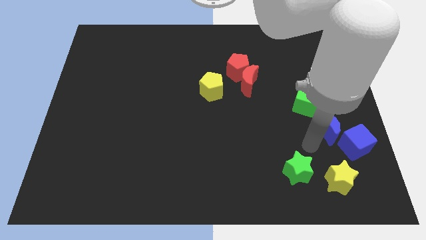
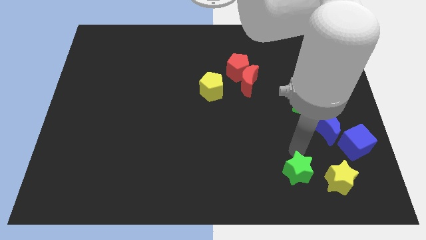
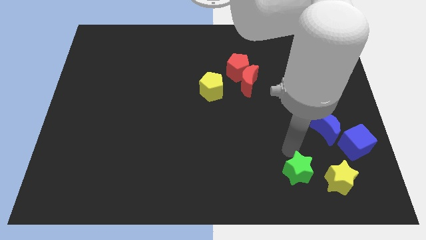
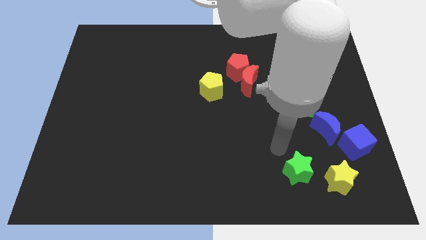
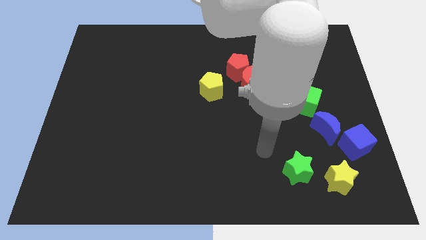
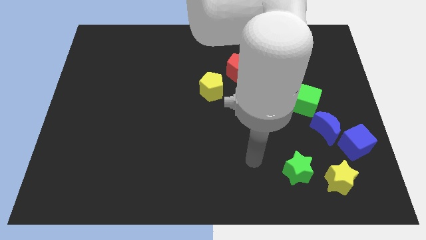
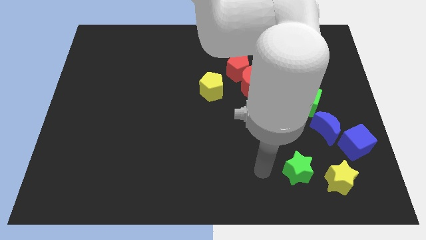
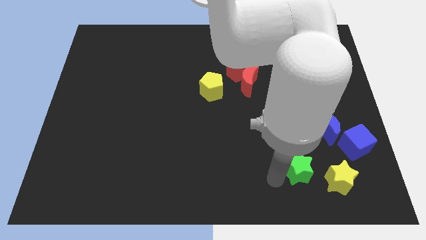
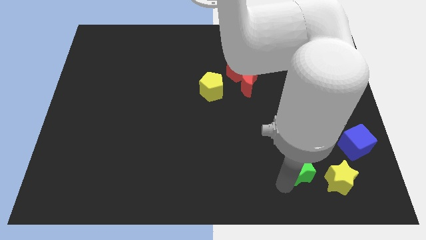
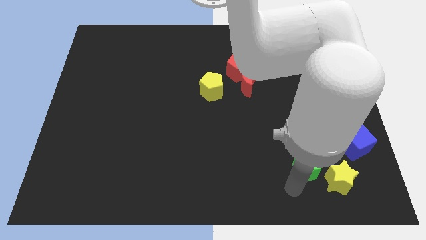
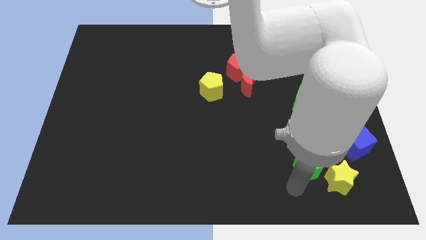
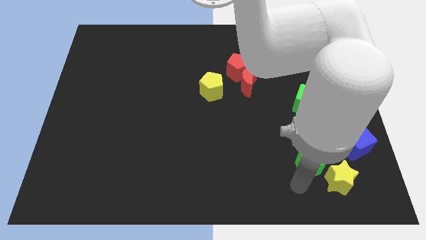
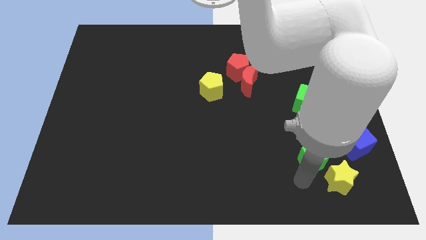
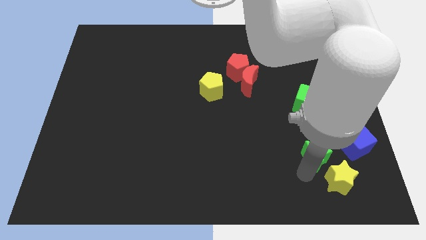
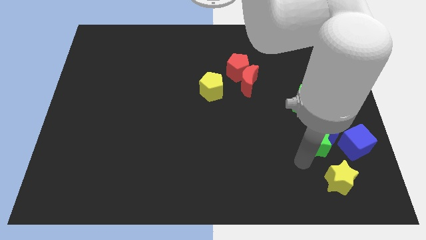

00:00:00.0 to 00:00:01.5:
slightly push the green star to the left of blue crescent

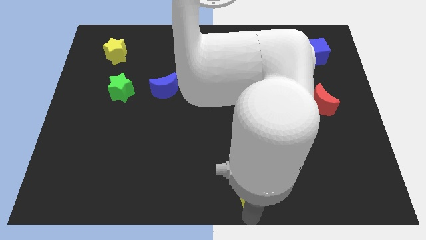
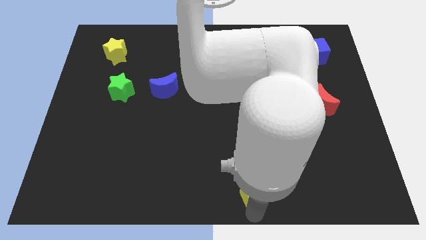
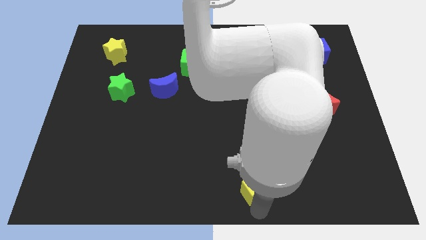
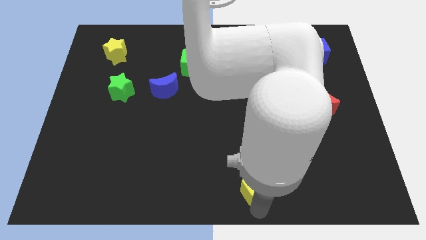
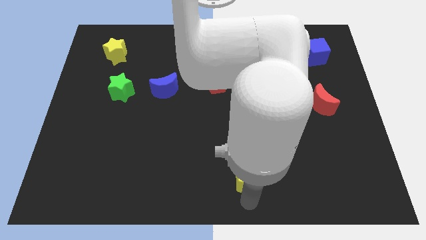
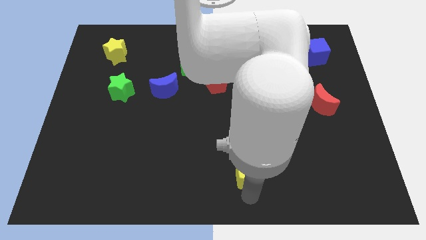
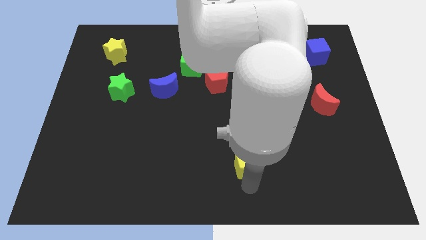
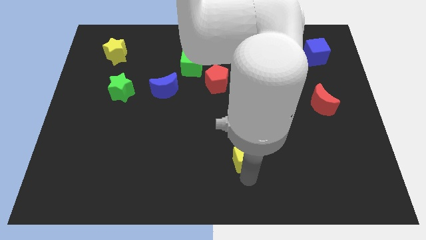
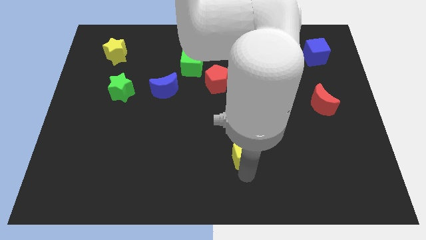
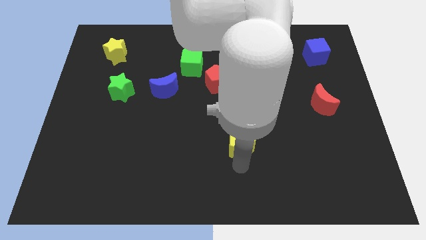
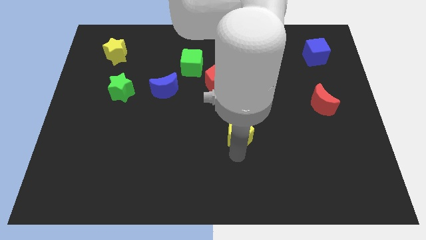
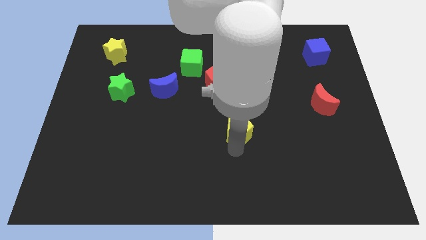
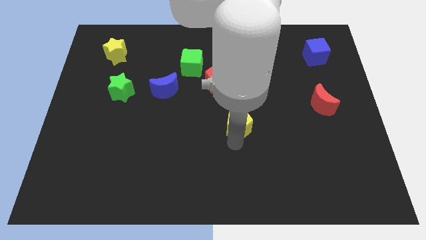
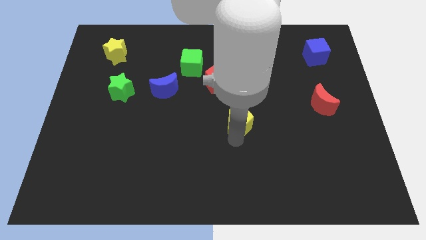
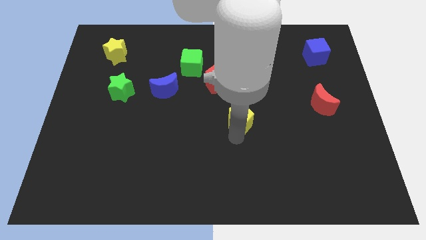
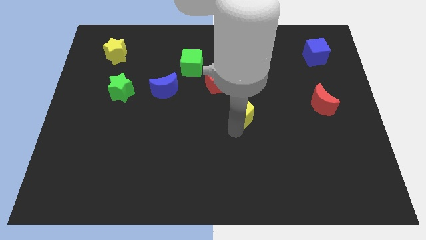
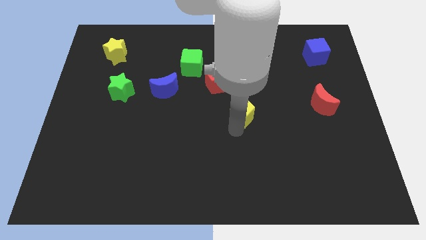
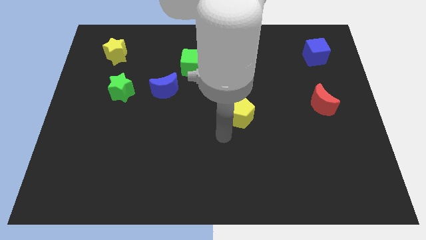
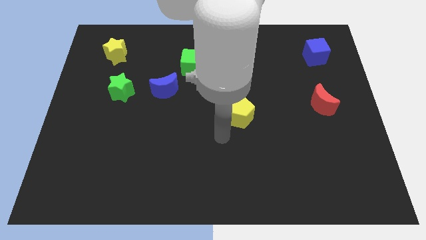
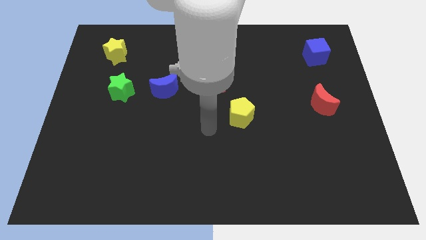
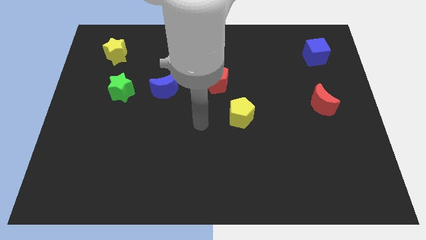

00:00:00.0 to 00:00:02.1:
place the yellow pentagon diagonally on the bottom right side of the red pentagon

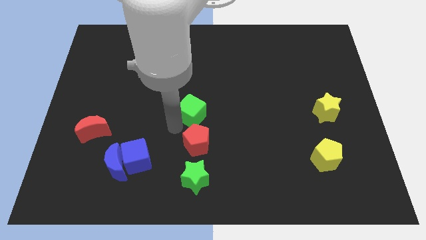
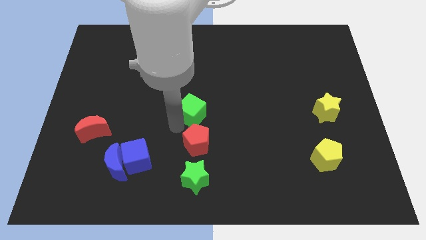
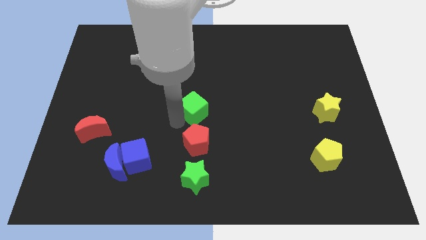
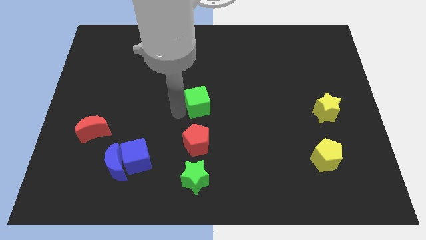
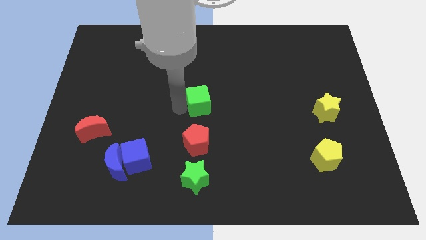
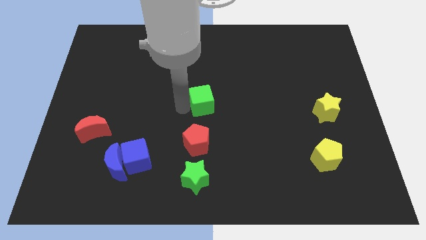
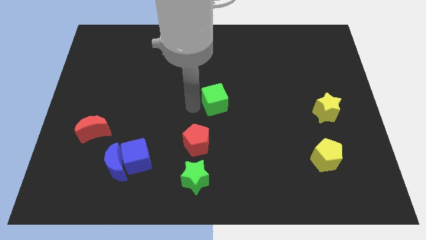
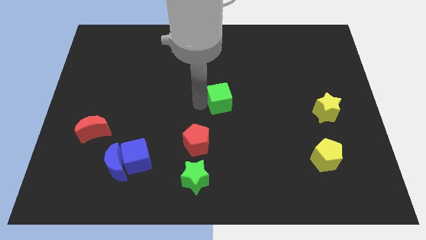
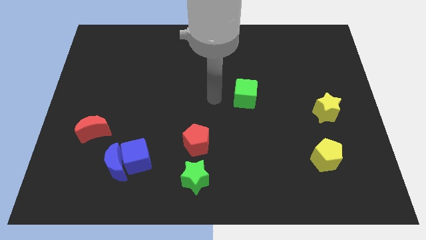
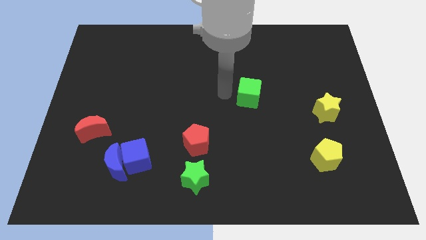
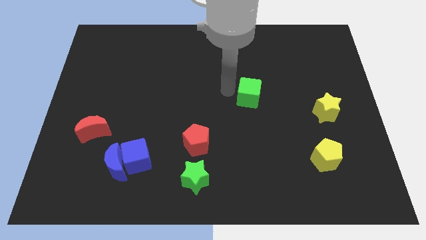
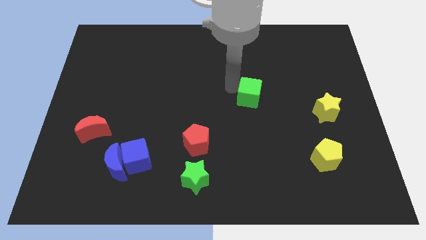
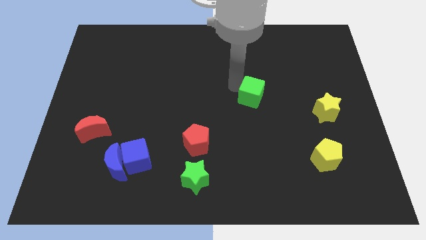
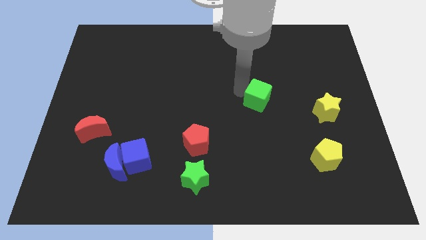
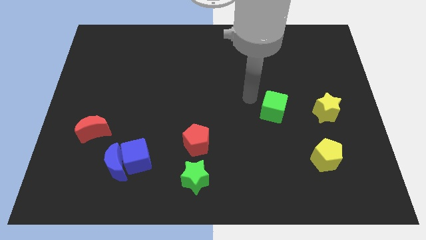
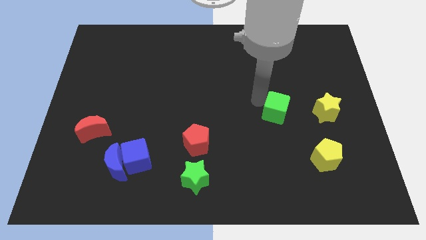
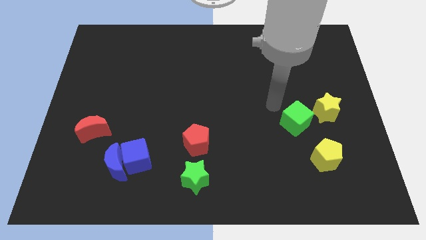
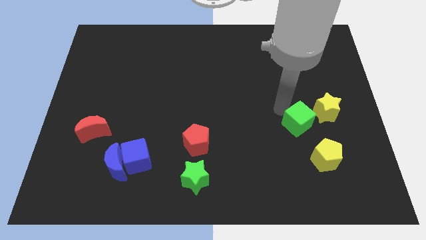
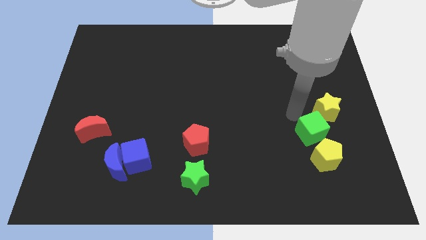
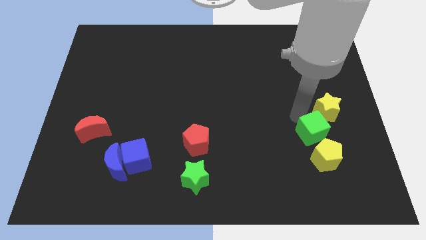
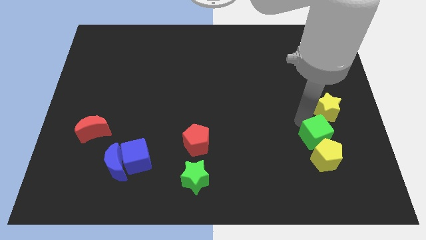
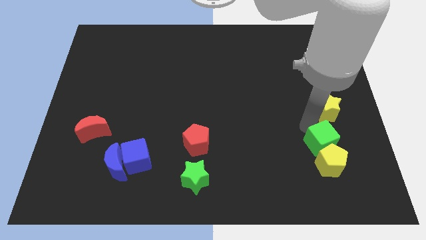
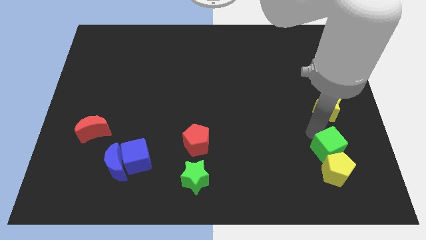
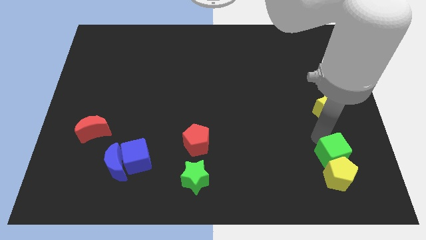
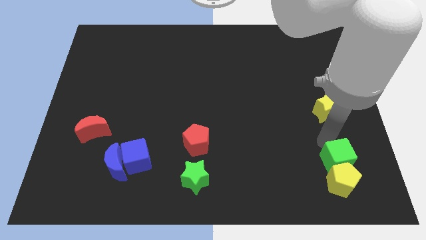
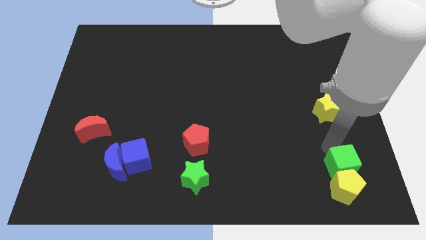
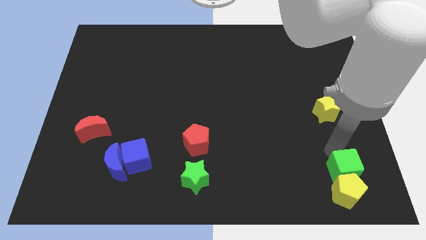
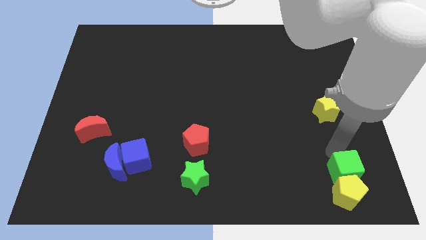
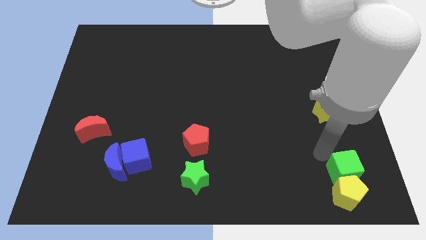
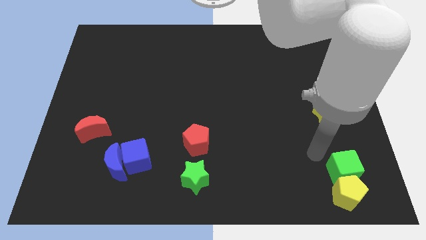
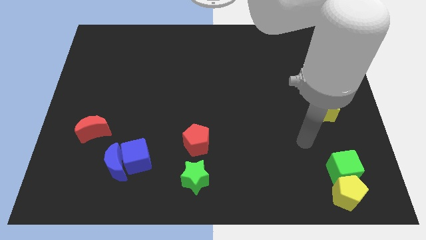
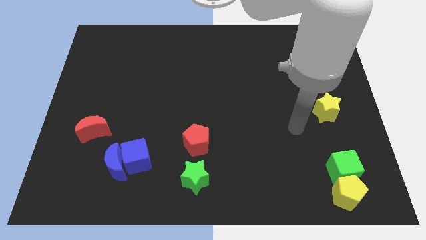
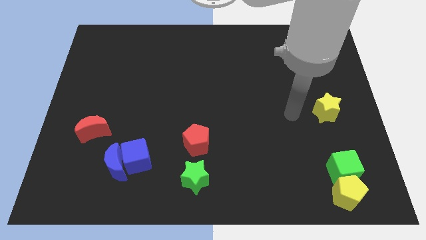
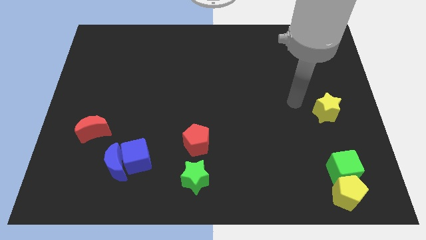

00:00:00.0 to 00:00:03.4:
push green cube above yellow pentagon

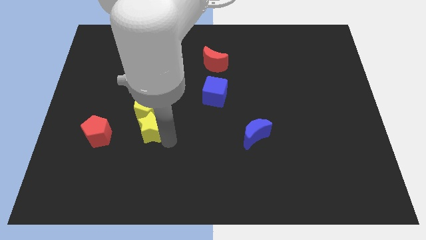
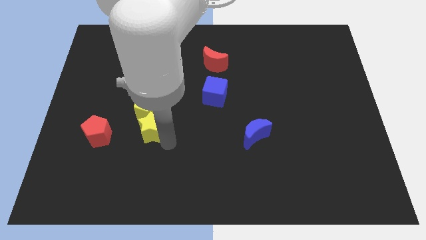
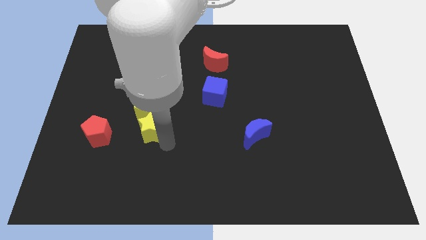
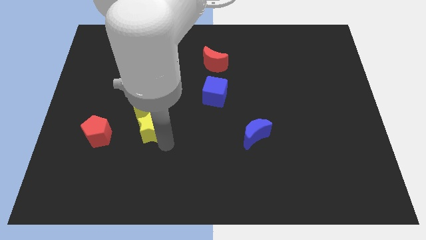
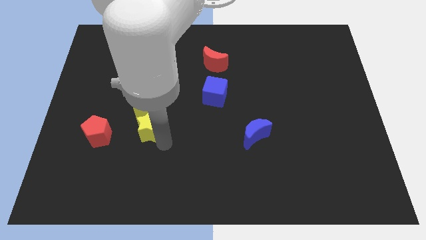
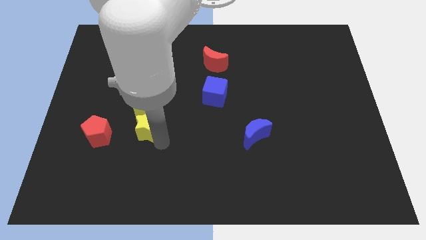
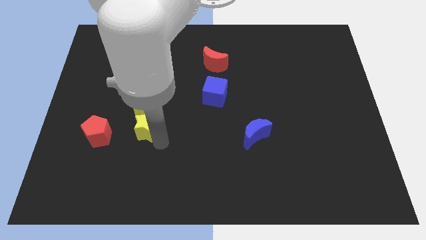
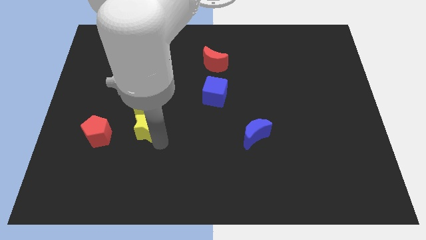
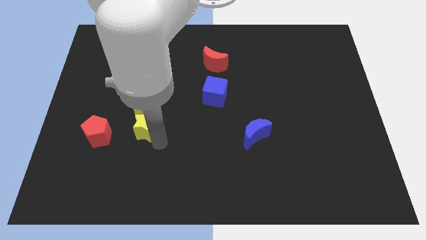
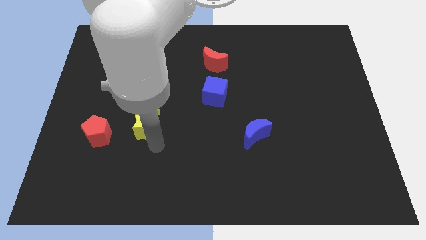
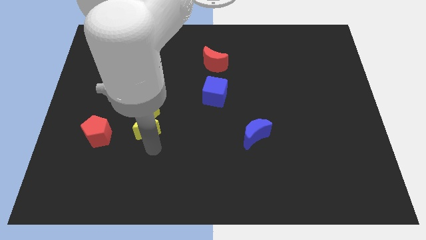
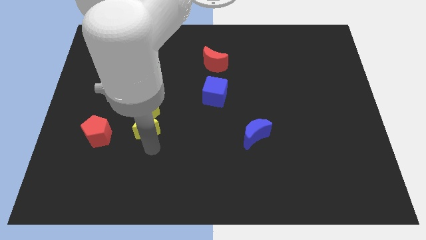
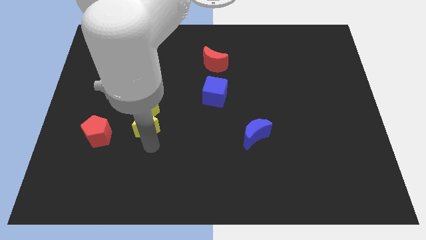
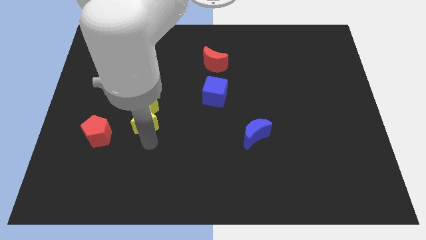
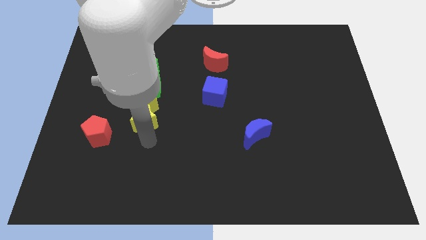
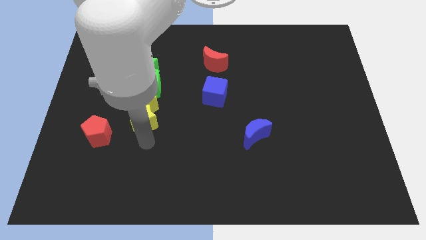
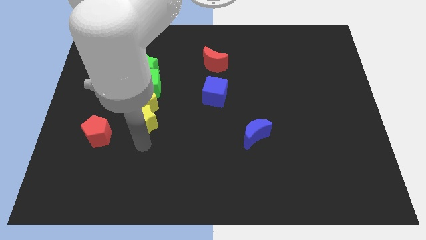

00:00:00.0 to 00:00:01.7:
adjust the yellow star below to the yellow pentagon

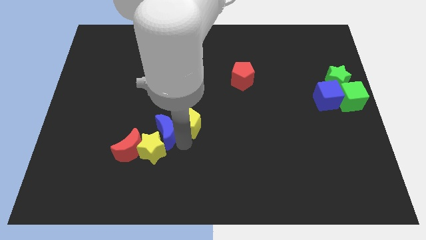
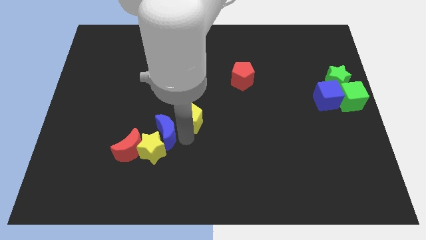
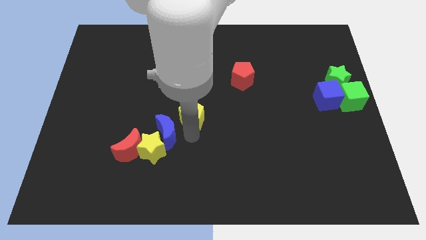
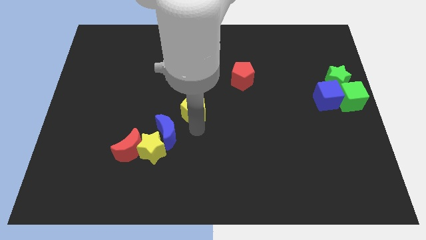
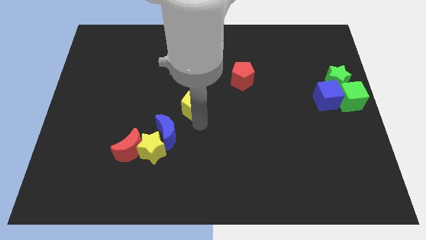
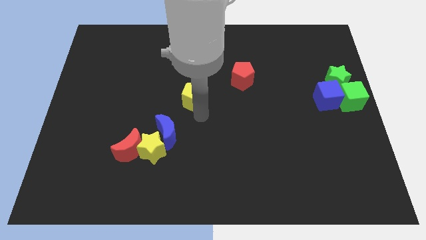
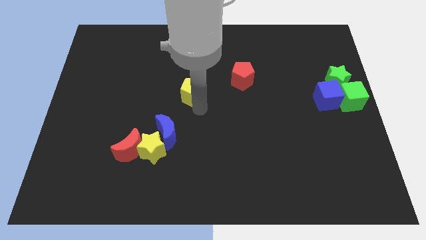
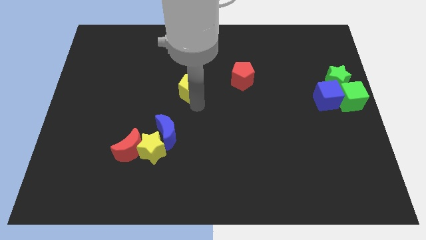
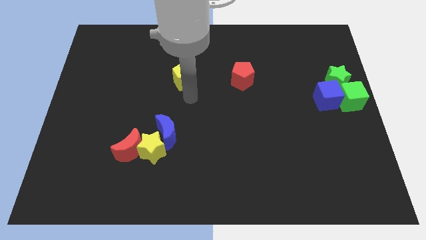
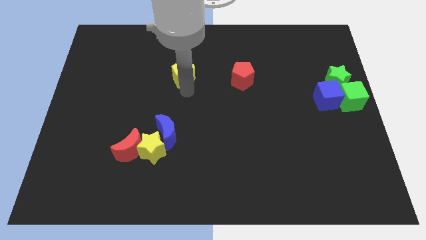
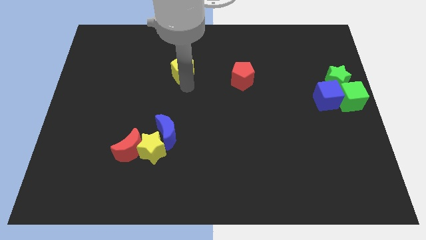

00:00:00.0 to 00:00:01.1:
separate yellow pentagon from blue moon
